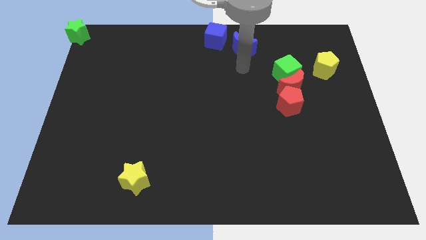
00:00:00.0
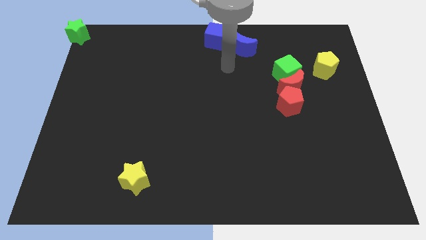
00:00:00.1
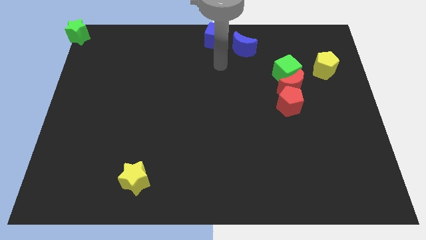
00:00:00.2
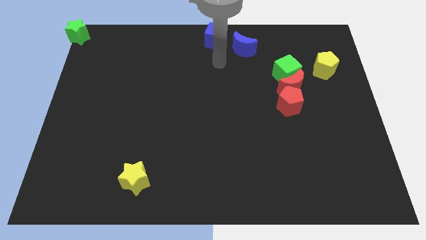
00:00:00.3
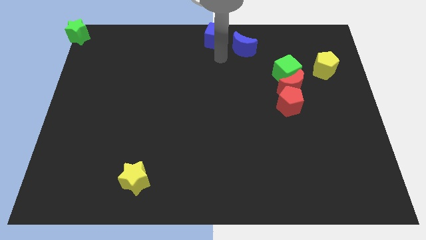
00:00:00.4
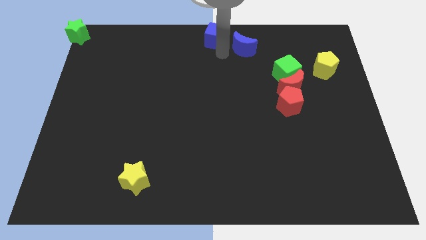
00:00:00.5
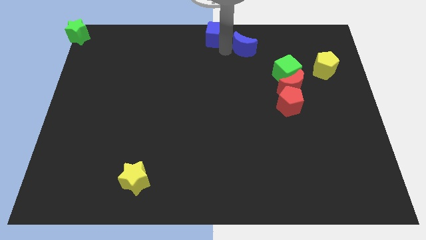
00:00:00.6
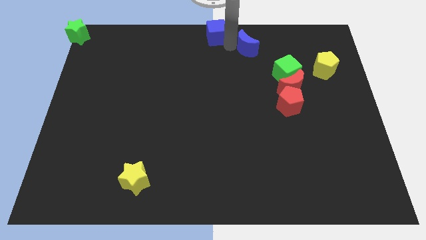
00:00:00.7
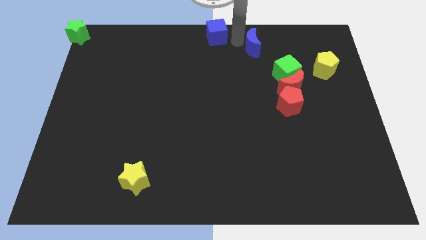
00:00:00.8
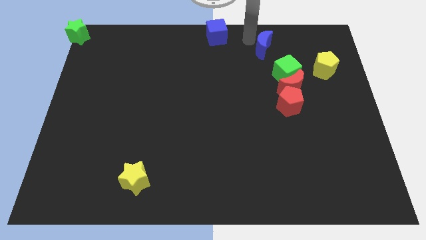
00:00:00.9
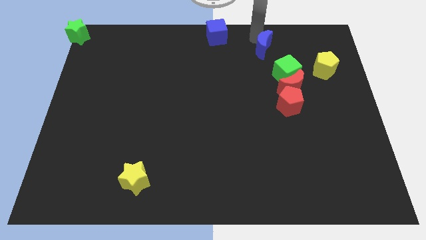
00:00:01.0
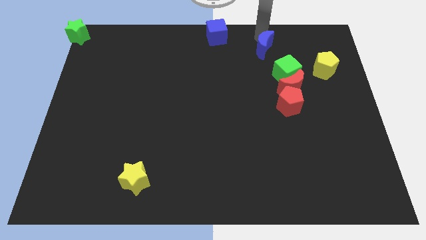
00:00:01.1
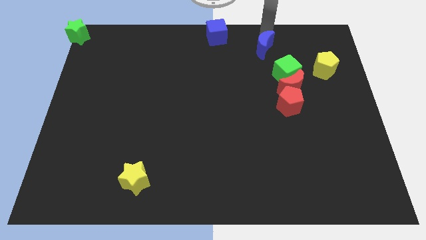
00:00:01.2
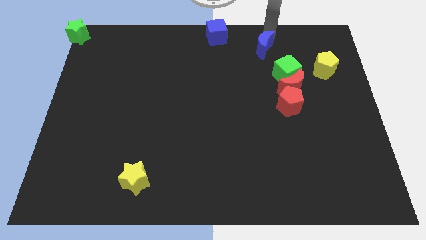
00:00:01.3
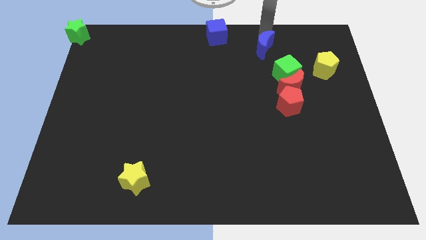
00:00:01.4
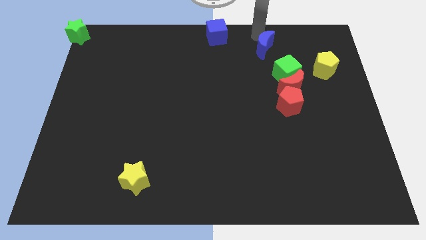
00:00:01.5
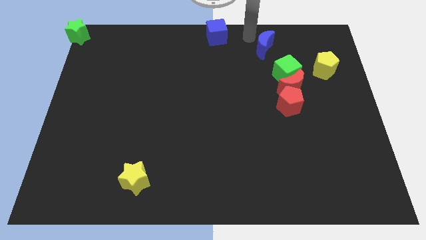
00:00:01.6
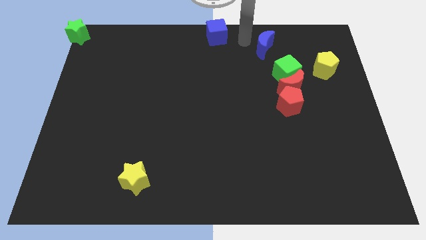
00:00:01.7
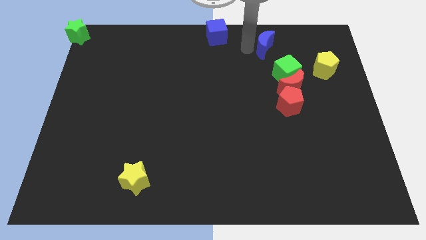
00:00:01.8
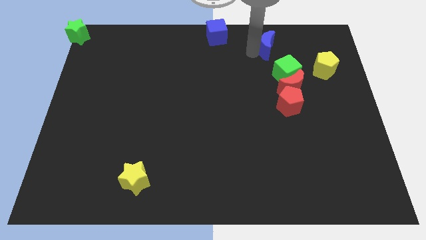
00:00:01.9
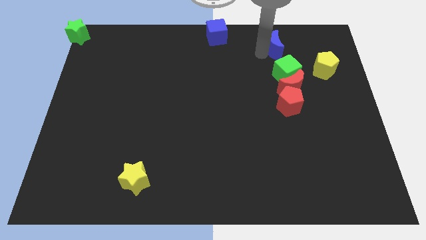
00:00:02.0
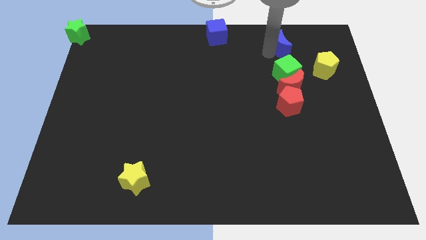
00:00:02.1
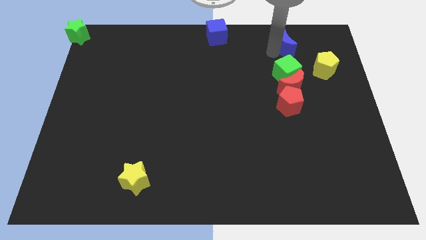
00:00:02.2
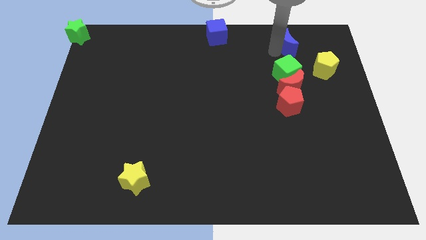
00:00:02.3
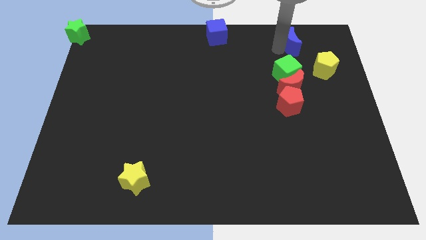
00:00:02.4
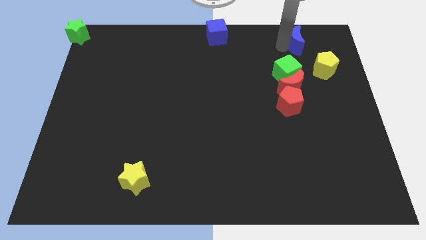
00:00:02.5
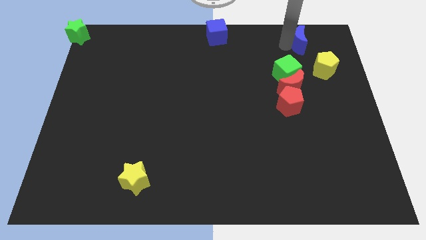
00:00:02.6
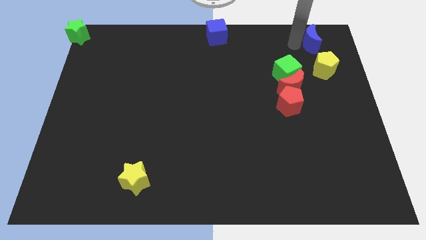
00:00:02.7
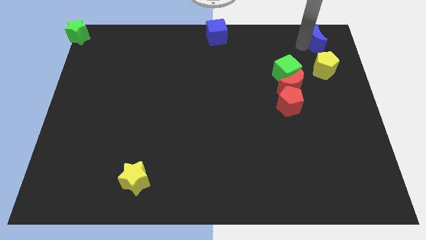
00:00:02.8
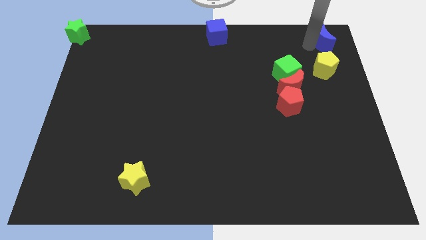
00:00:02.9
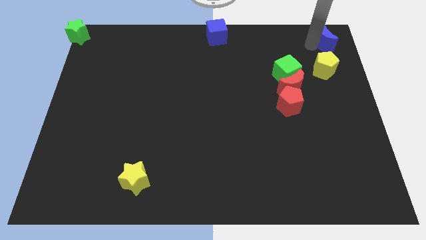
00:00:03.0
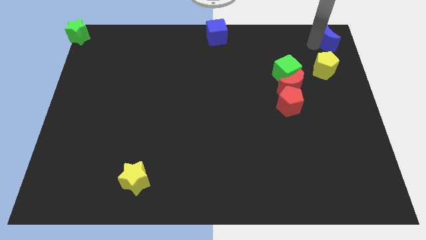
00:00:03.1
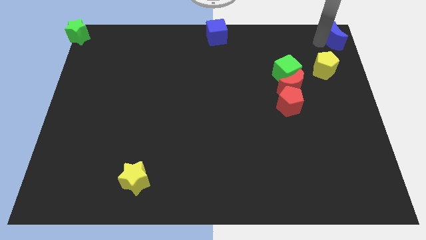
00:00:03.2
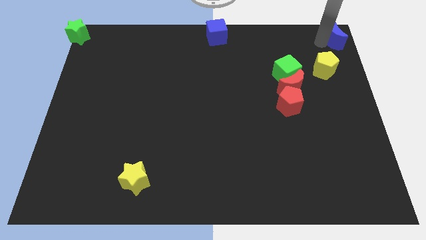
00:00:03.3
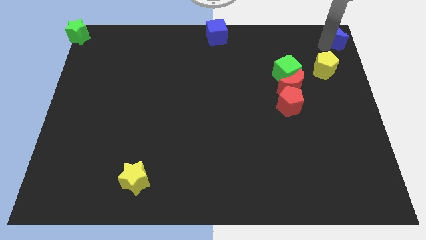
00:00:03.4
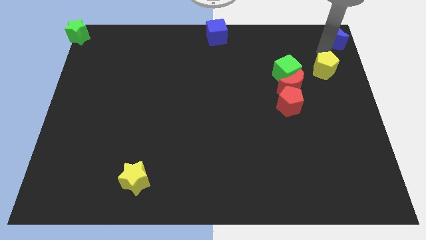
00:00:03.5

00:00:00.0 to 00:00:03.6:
push the blue moon to the top right corner

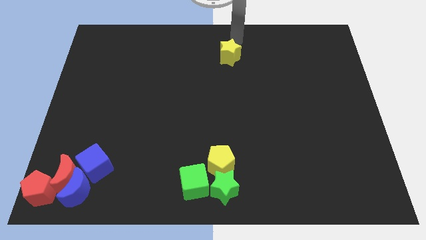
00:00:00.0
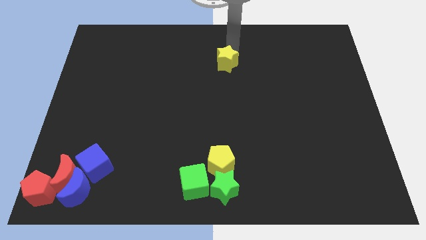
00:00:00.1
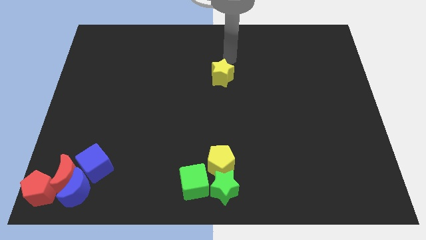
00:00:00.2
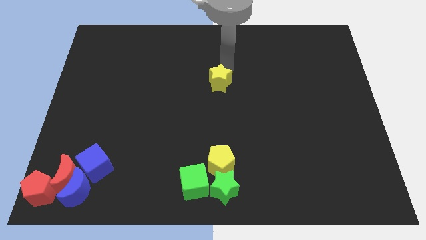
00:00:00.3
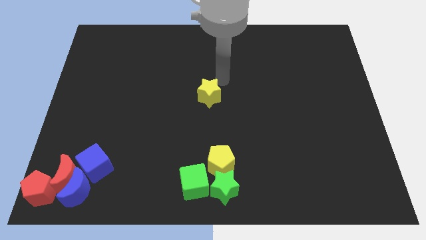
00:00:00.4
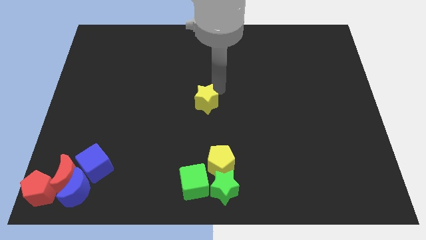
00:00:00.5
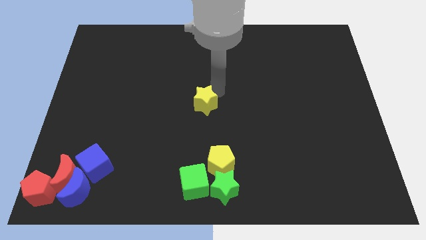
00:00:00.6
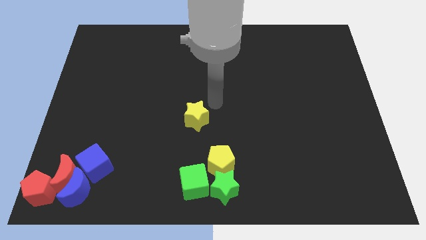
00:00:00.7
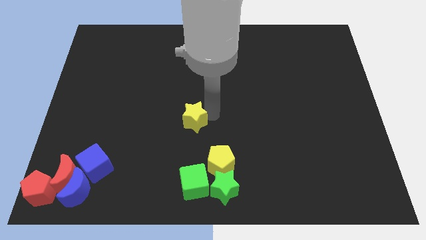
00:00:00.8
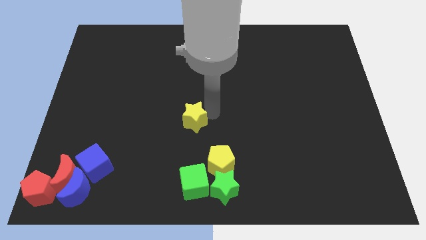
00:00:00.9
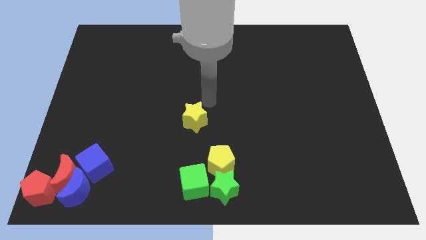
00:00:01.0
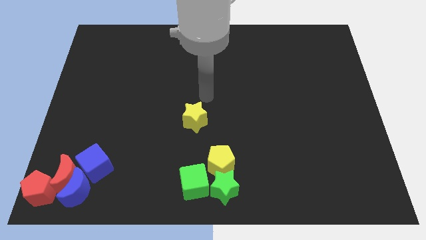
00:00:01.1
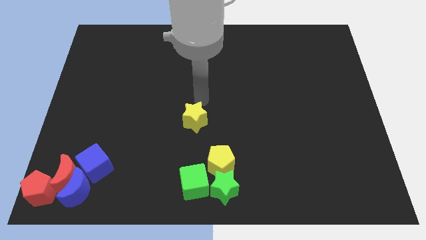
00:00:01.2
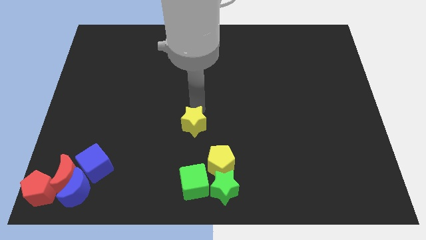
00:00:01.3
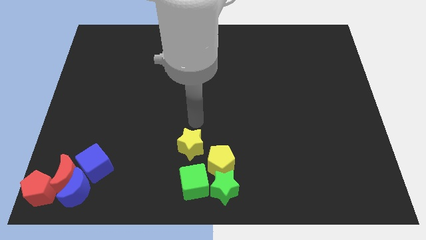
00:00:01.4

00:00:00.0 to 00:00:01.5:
push yellow star towards the green cube

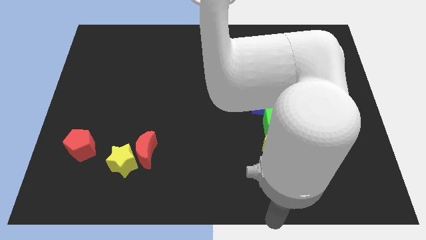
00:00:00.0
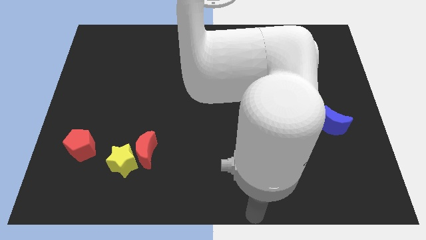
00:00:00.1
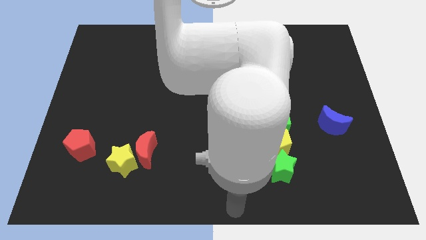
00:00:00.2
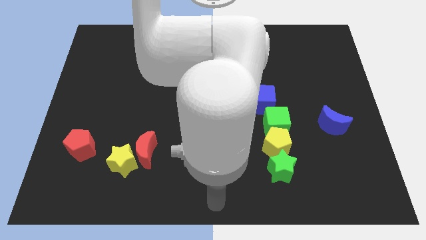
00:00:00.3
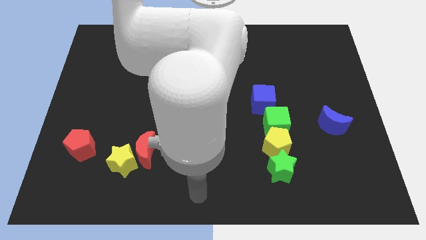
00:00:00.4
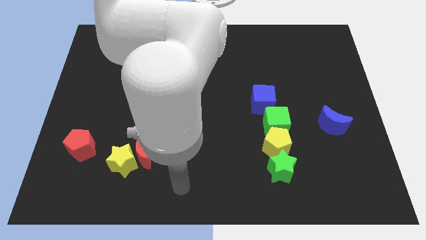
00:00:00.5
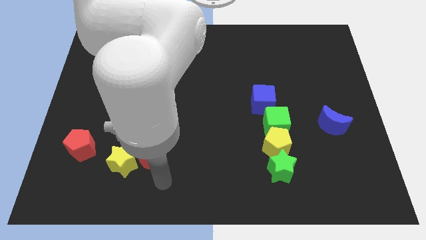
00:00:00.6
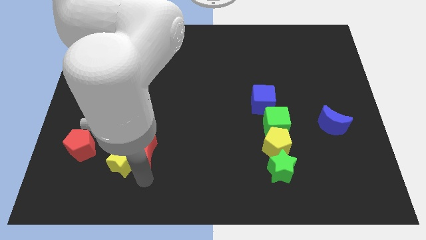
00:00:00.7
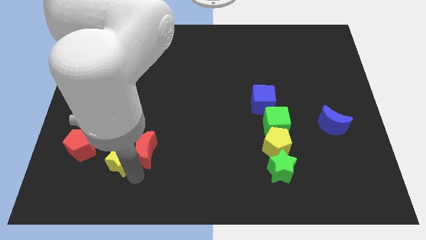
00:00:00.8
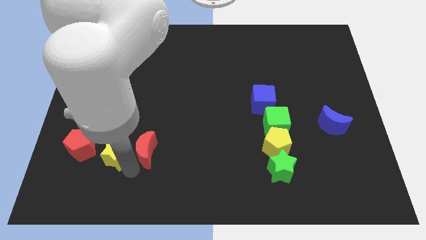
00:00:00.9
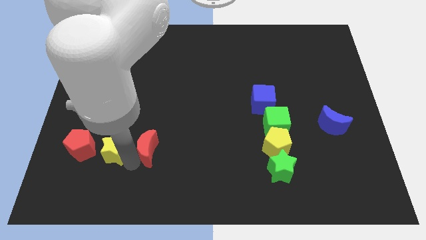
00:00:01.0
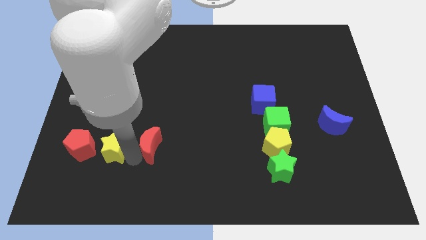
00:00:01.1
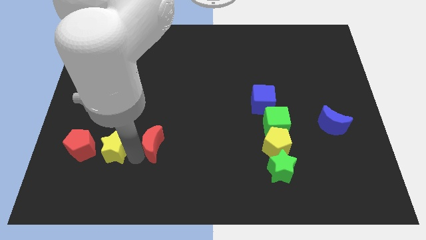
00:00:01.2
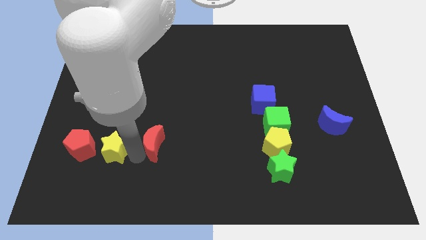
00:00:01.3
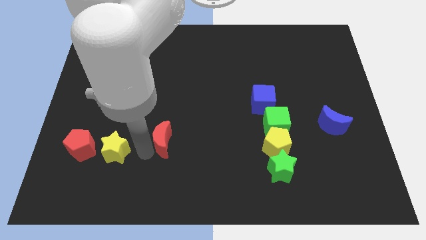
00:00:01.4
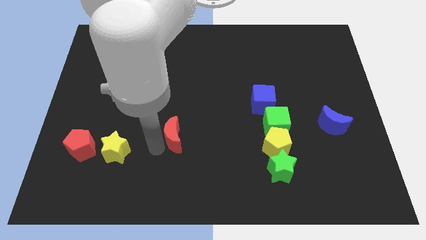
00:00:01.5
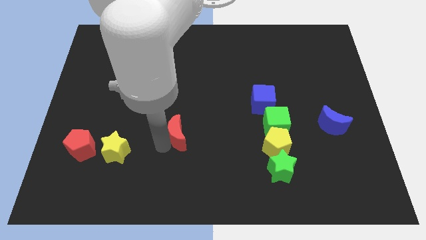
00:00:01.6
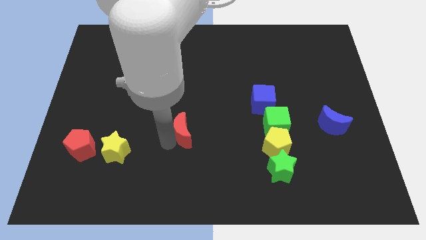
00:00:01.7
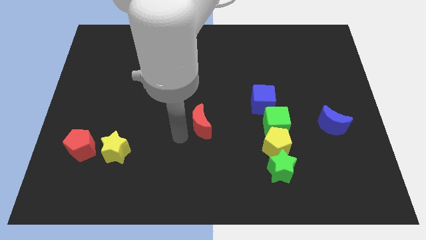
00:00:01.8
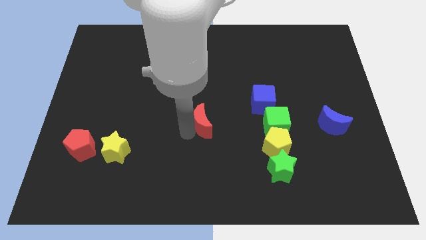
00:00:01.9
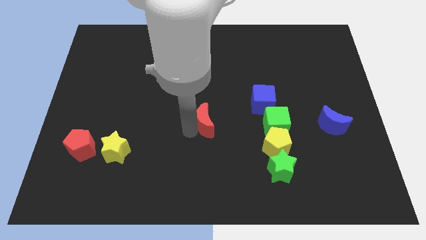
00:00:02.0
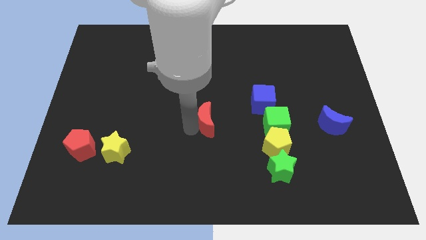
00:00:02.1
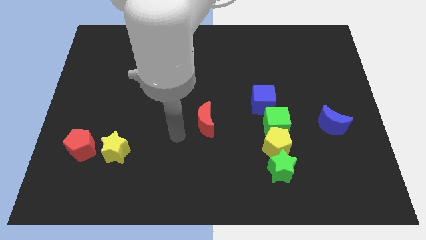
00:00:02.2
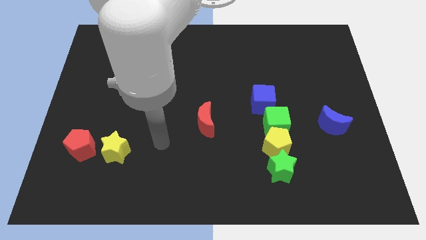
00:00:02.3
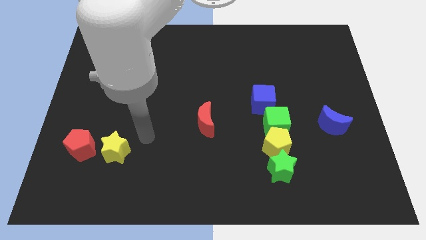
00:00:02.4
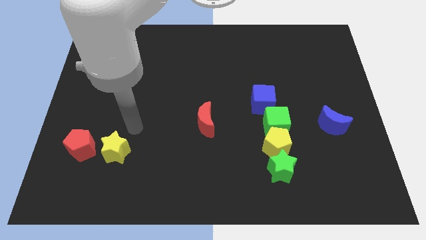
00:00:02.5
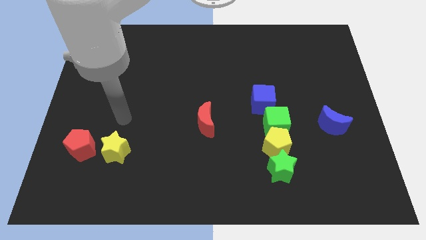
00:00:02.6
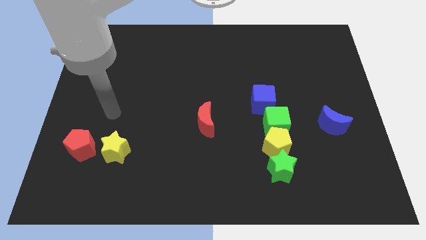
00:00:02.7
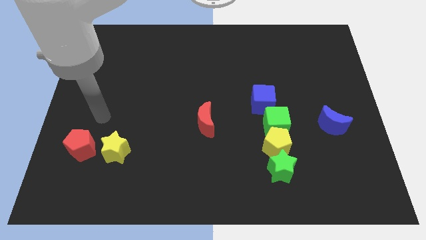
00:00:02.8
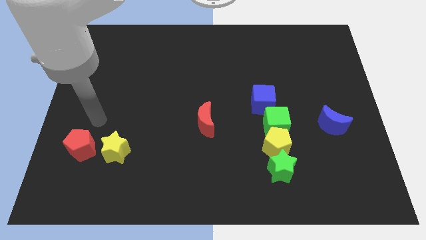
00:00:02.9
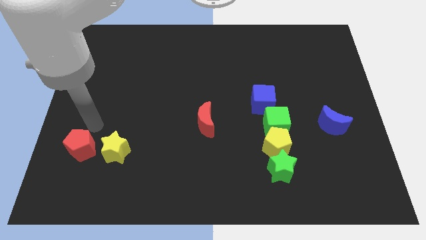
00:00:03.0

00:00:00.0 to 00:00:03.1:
slide red moon to the left of green cube

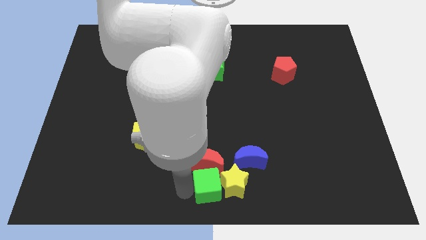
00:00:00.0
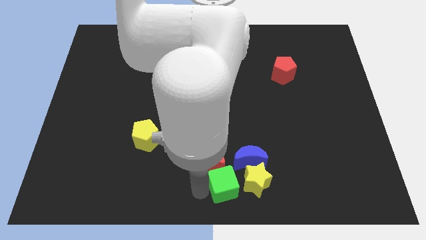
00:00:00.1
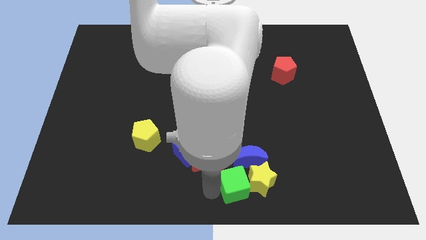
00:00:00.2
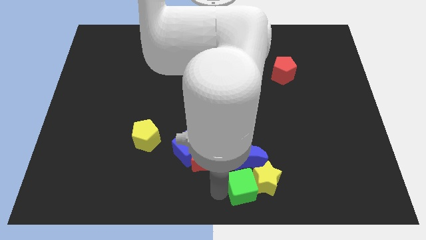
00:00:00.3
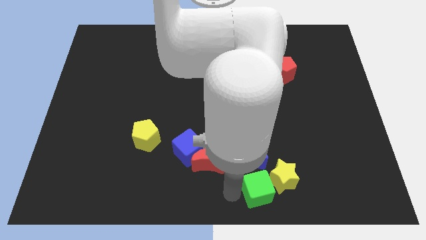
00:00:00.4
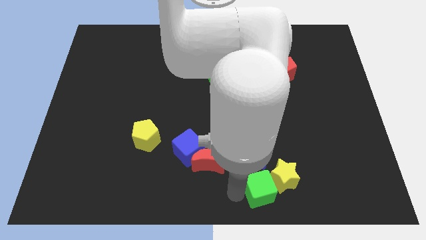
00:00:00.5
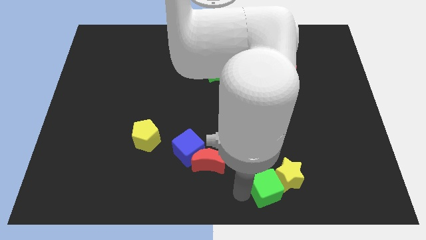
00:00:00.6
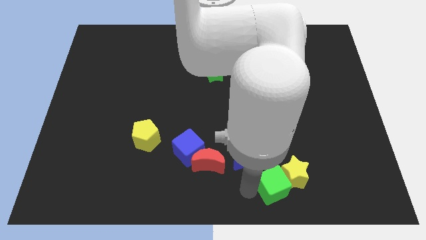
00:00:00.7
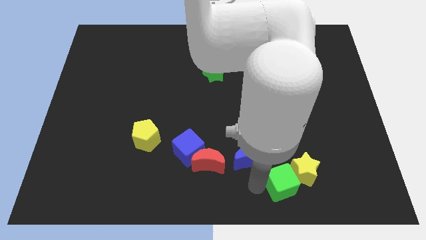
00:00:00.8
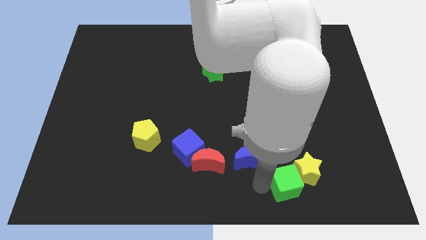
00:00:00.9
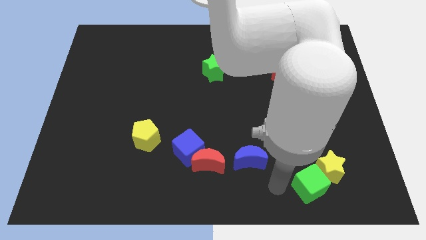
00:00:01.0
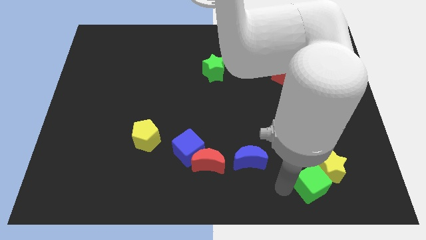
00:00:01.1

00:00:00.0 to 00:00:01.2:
drag the green cube and yellow star diagonally on the bottom right side of the blue crescent
